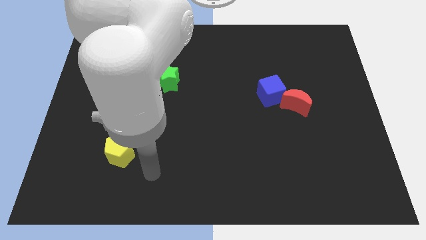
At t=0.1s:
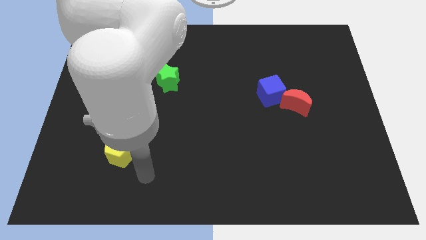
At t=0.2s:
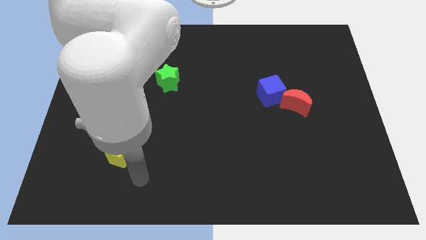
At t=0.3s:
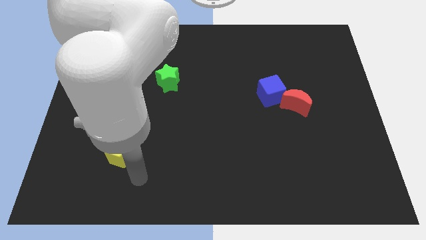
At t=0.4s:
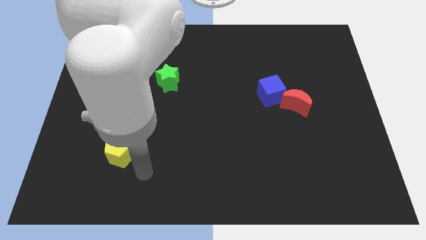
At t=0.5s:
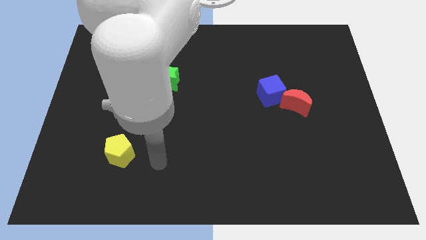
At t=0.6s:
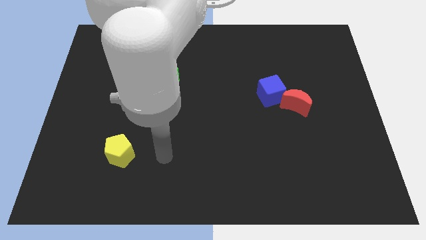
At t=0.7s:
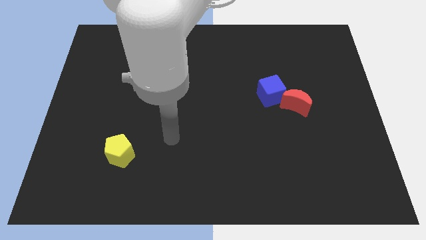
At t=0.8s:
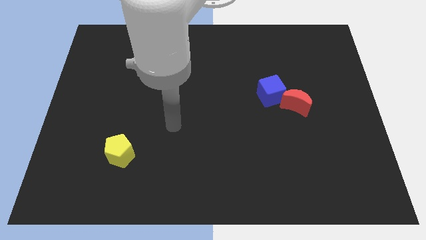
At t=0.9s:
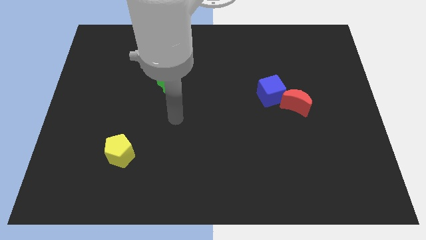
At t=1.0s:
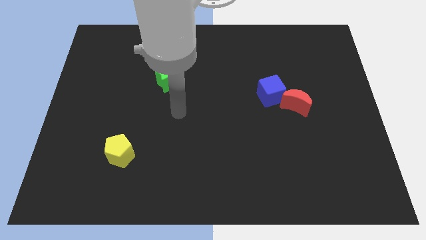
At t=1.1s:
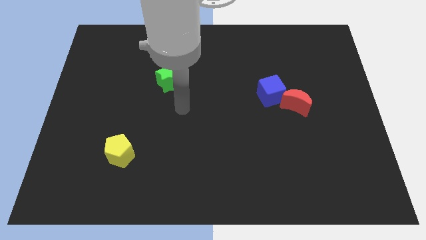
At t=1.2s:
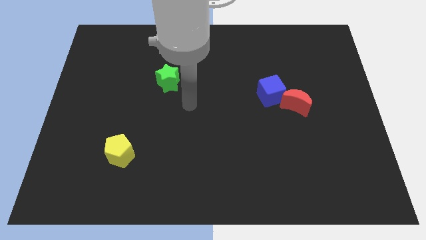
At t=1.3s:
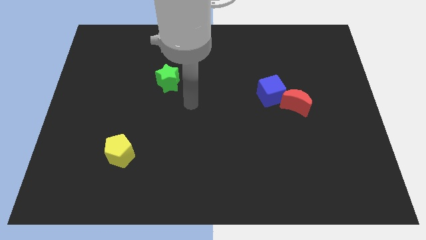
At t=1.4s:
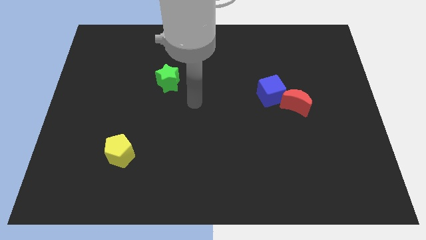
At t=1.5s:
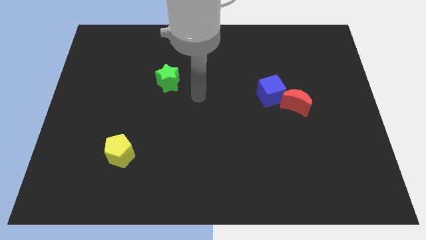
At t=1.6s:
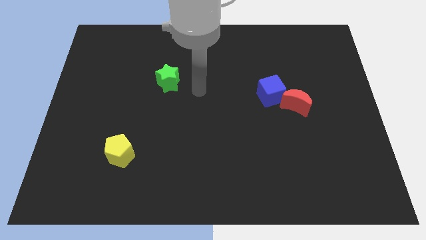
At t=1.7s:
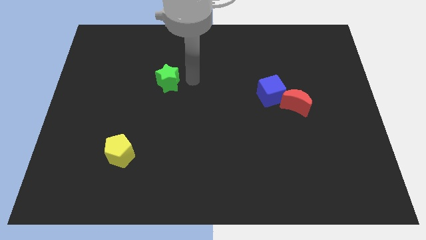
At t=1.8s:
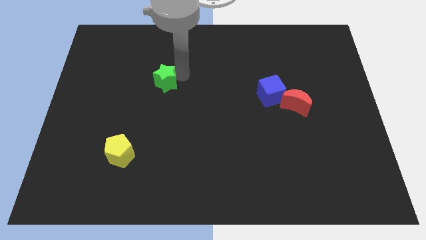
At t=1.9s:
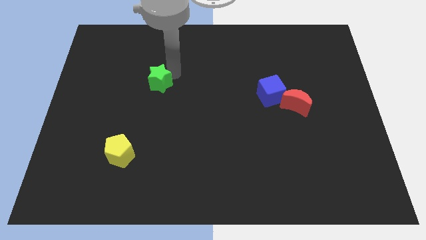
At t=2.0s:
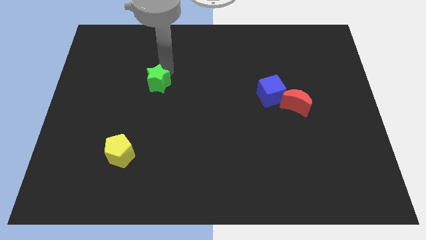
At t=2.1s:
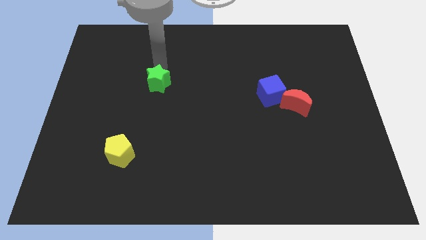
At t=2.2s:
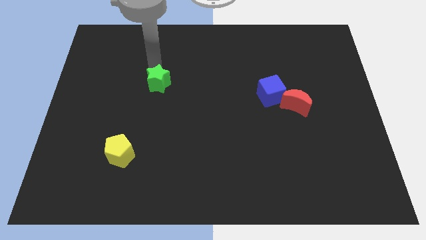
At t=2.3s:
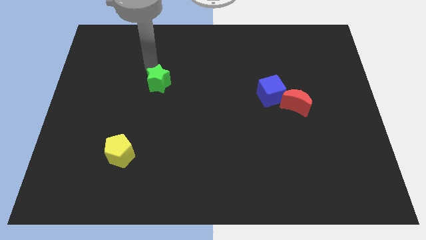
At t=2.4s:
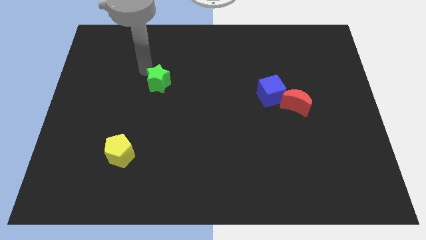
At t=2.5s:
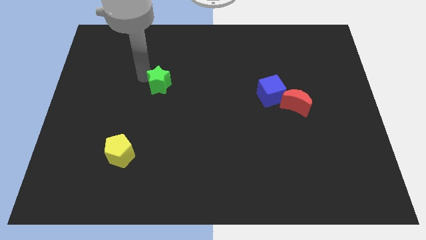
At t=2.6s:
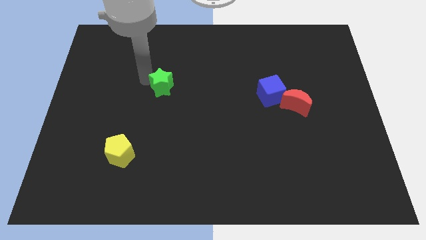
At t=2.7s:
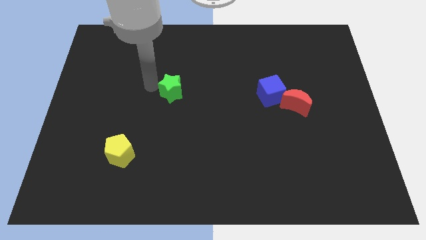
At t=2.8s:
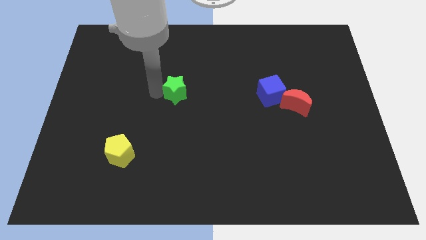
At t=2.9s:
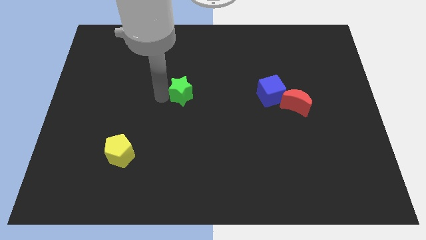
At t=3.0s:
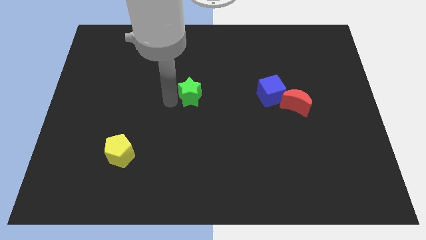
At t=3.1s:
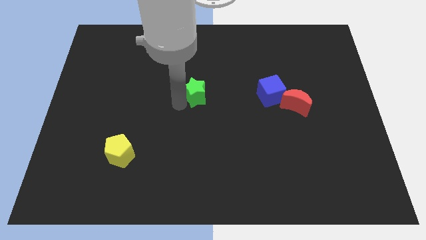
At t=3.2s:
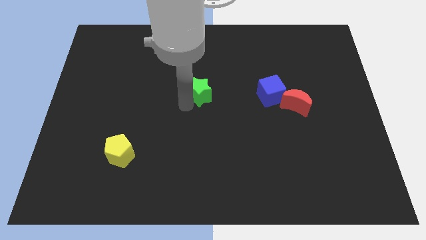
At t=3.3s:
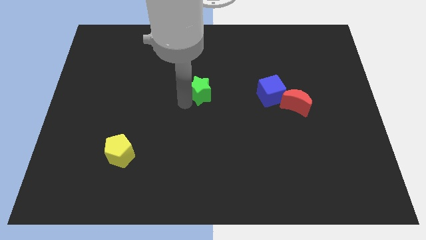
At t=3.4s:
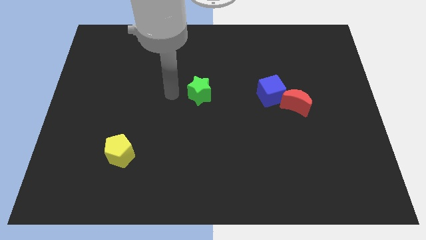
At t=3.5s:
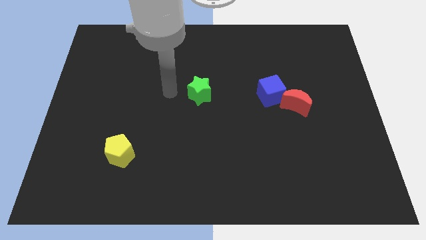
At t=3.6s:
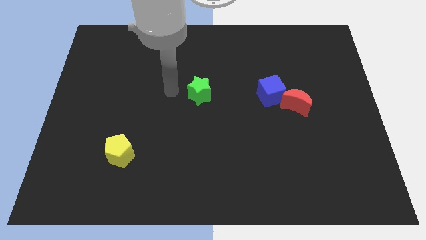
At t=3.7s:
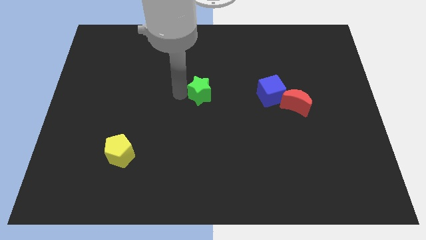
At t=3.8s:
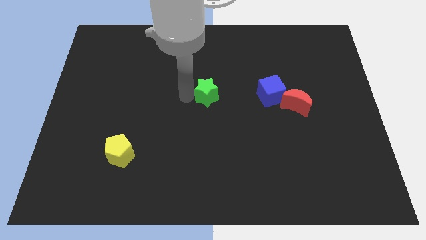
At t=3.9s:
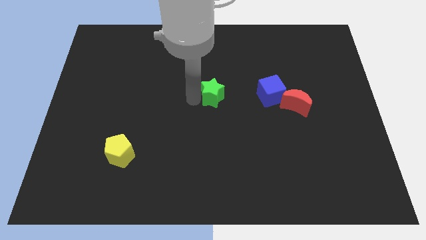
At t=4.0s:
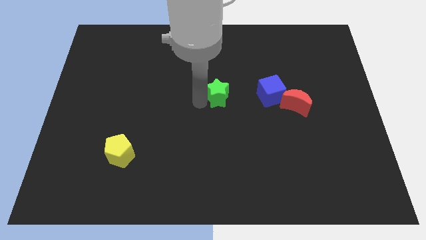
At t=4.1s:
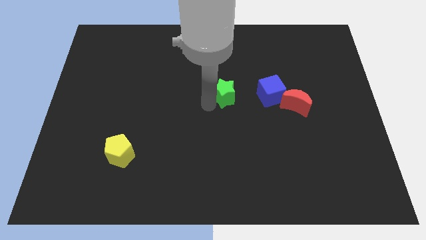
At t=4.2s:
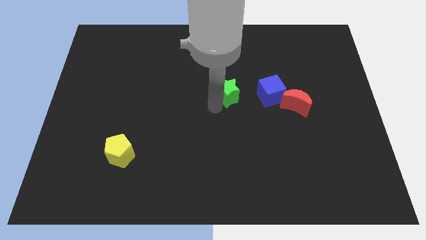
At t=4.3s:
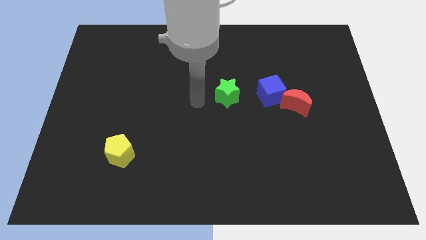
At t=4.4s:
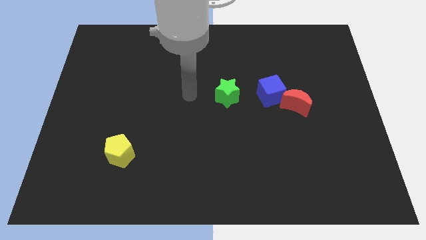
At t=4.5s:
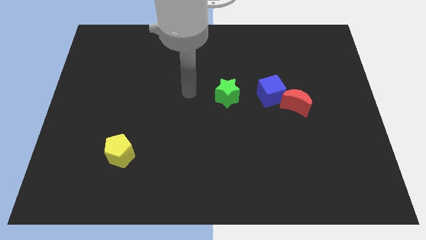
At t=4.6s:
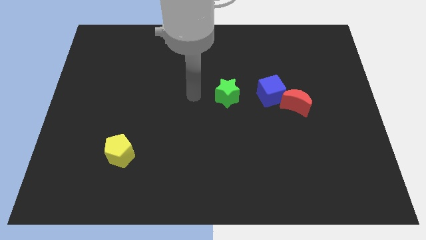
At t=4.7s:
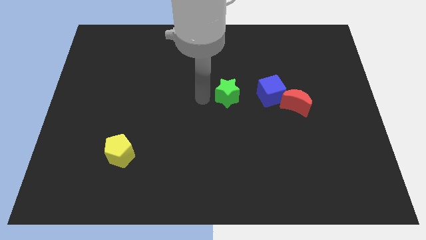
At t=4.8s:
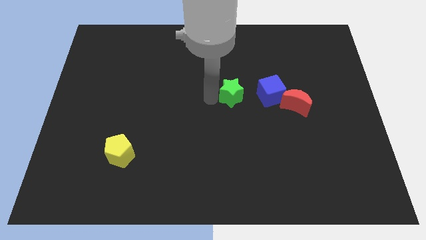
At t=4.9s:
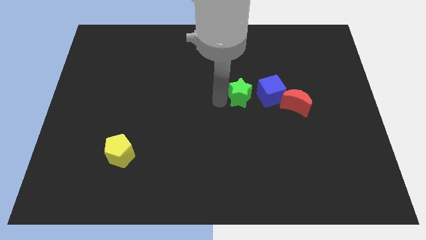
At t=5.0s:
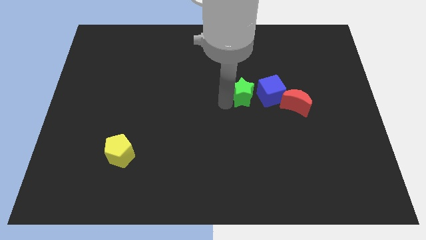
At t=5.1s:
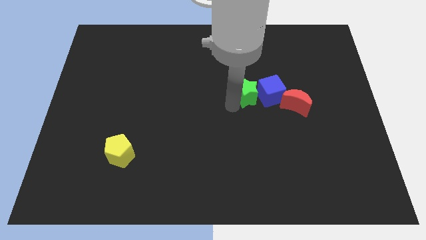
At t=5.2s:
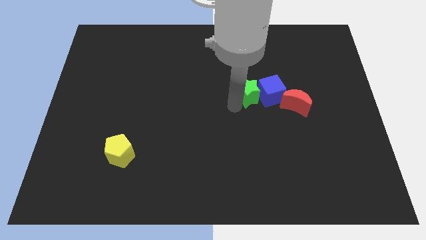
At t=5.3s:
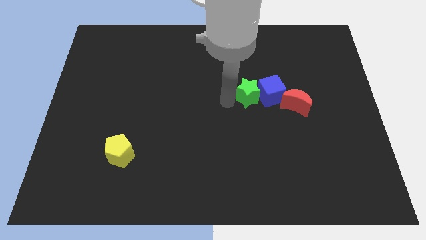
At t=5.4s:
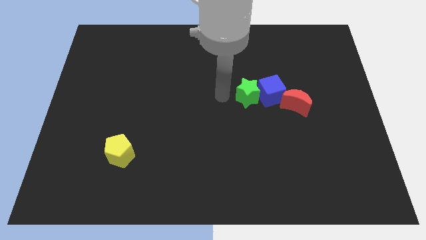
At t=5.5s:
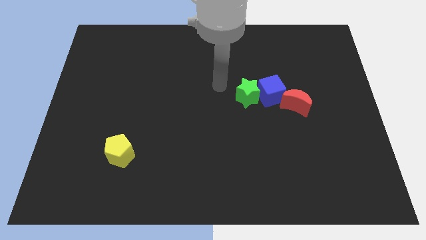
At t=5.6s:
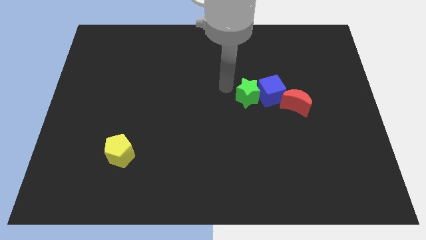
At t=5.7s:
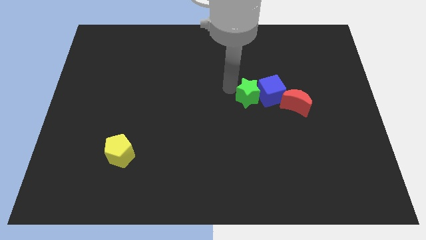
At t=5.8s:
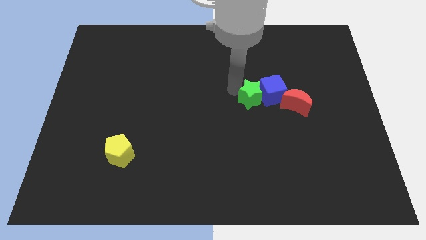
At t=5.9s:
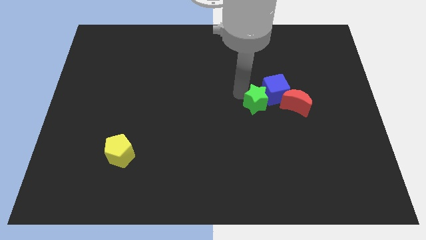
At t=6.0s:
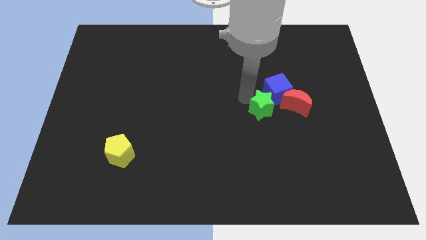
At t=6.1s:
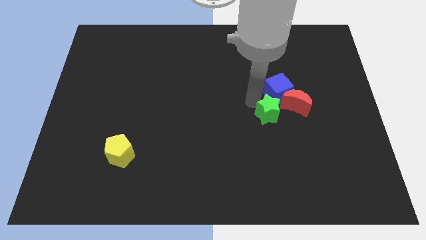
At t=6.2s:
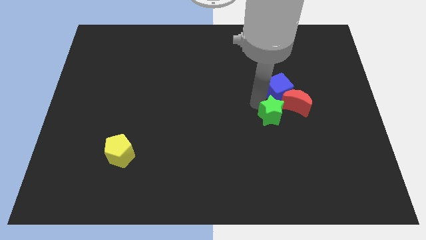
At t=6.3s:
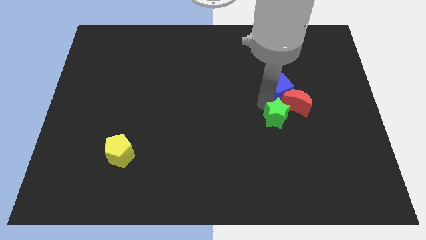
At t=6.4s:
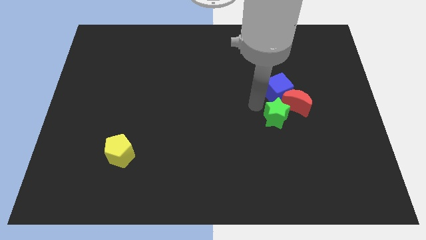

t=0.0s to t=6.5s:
move the green star towards the red moon

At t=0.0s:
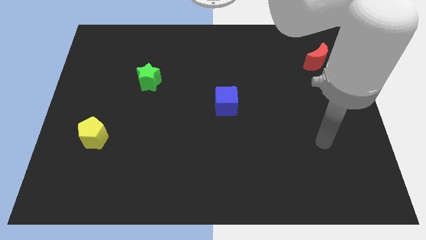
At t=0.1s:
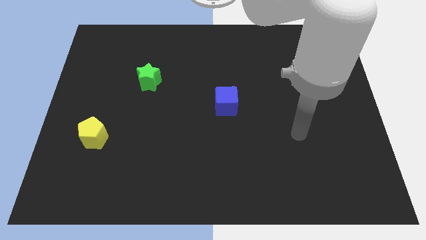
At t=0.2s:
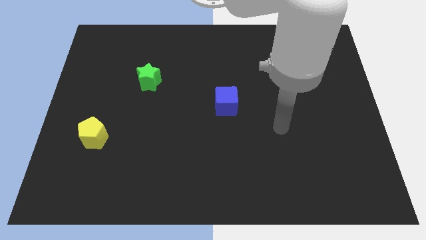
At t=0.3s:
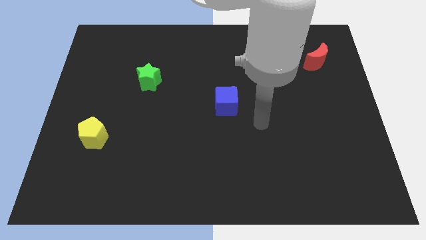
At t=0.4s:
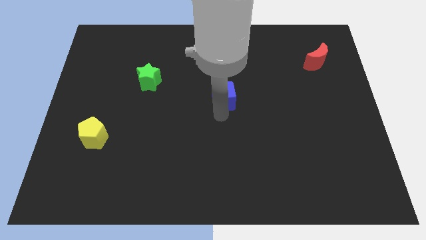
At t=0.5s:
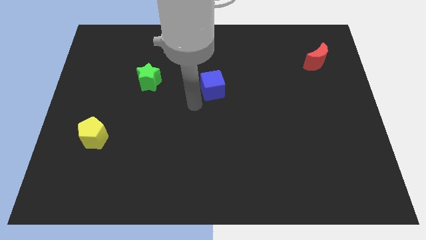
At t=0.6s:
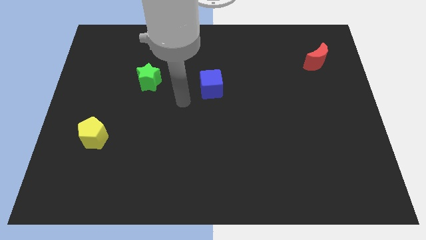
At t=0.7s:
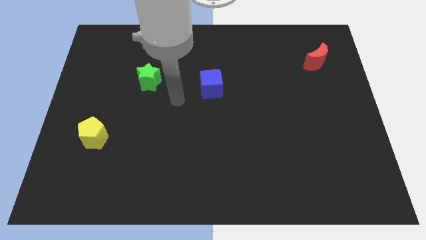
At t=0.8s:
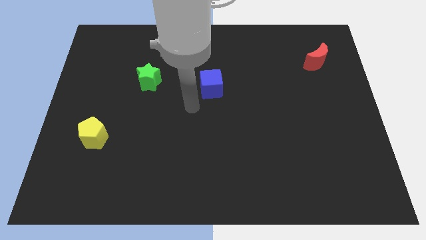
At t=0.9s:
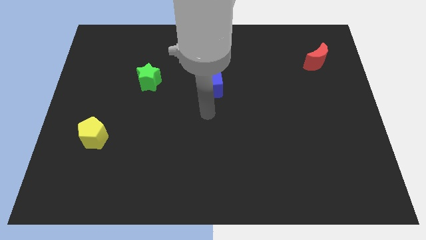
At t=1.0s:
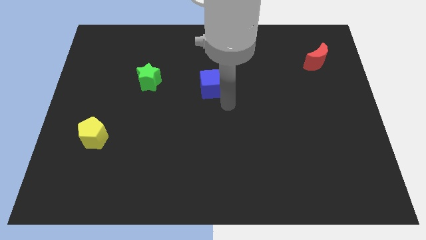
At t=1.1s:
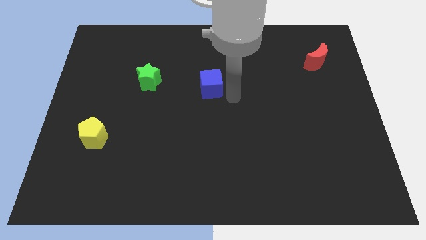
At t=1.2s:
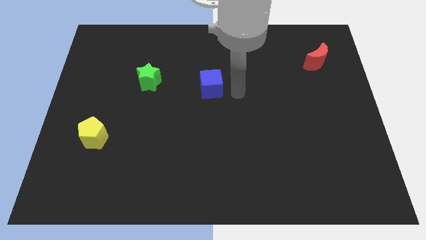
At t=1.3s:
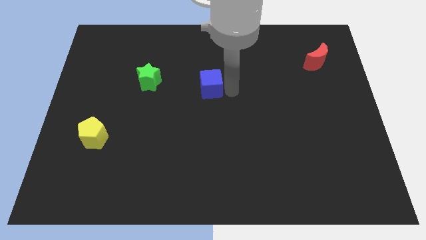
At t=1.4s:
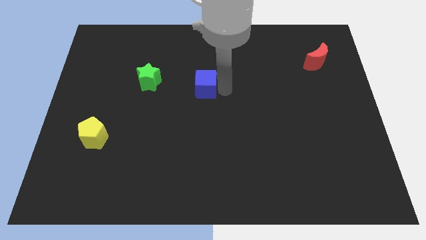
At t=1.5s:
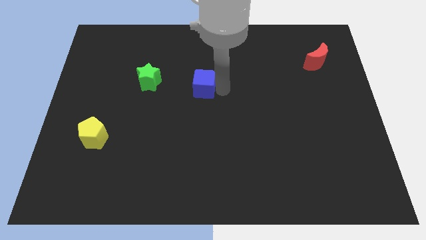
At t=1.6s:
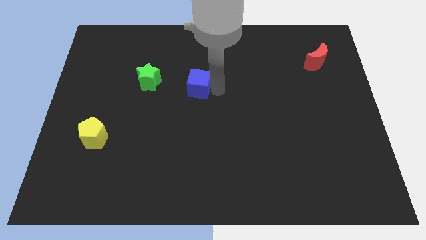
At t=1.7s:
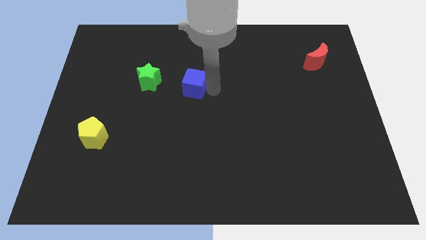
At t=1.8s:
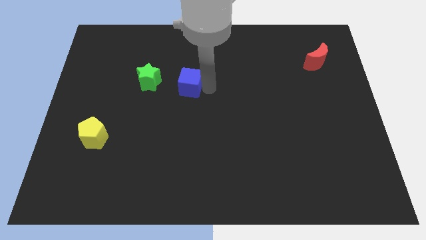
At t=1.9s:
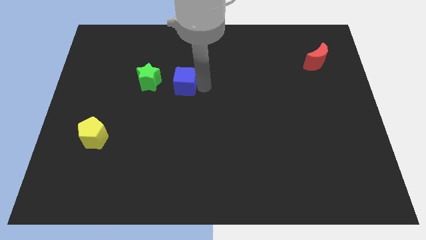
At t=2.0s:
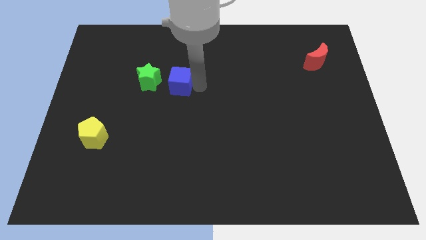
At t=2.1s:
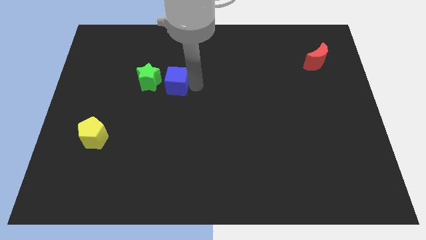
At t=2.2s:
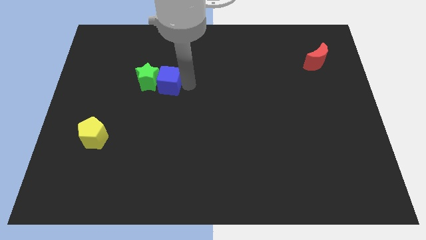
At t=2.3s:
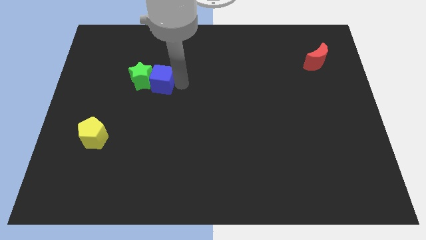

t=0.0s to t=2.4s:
push the cube next to the star
